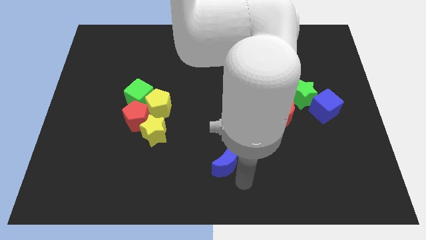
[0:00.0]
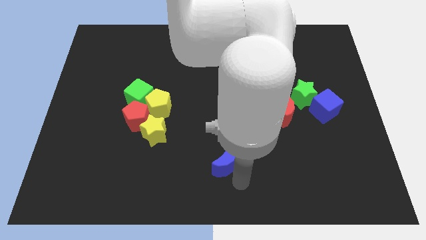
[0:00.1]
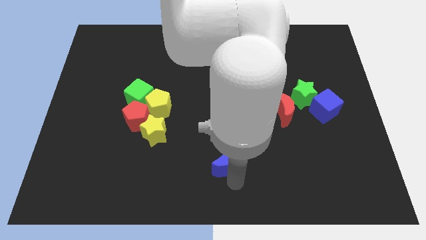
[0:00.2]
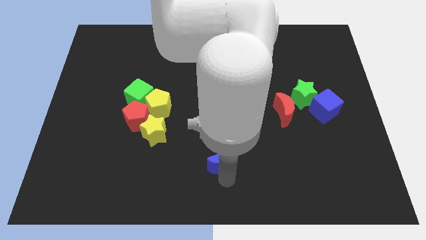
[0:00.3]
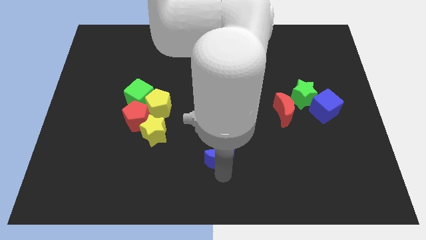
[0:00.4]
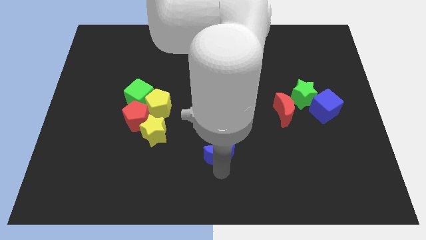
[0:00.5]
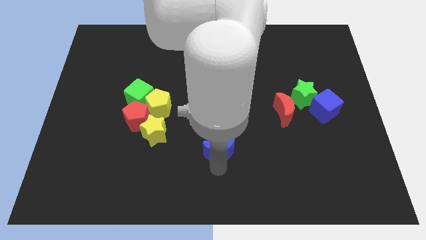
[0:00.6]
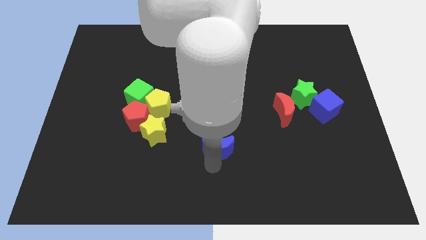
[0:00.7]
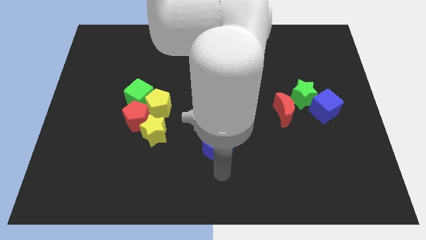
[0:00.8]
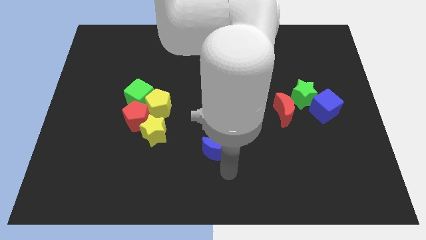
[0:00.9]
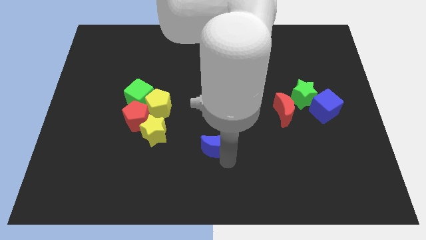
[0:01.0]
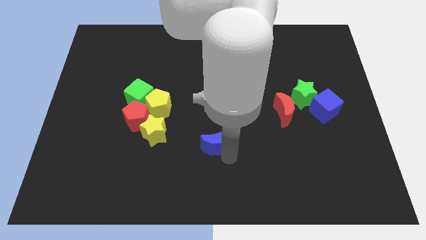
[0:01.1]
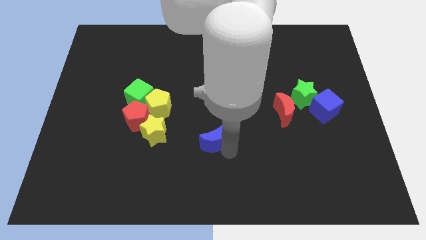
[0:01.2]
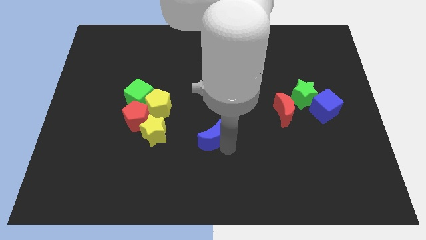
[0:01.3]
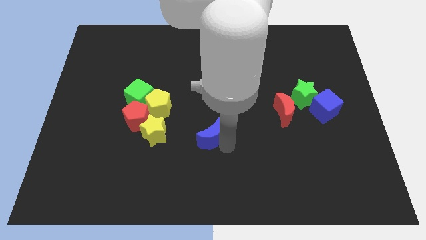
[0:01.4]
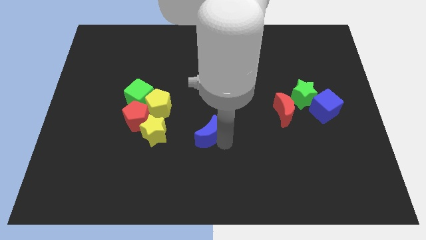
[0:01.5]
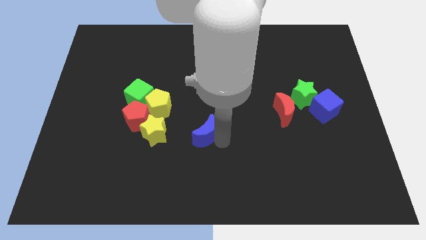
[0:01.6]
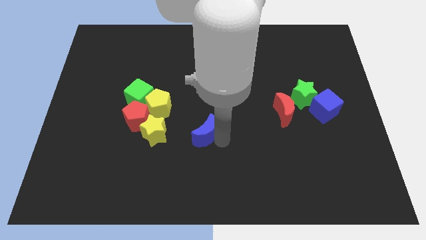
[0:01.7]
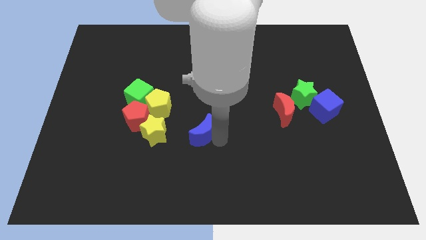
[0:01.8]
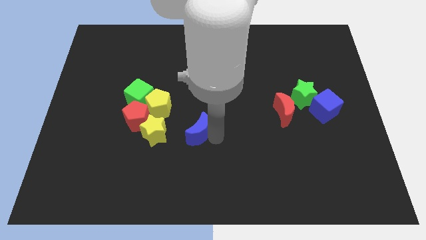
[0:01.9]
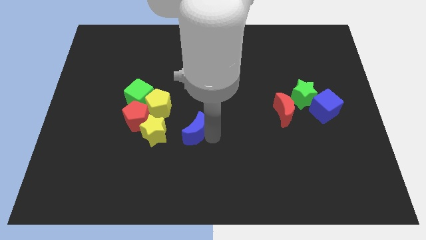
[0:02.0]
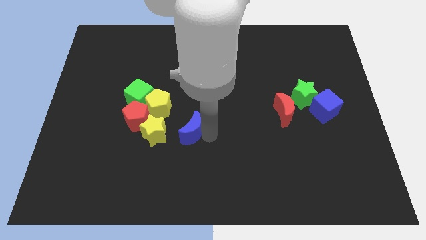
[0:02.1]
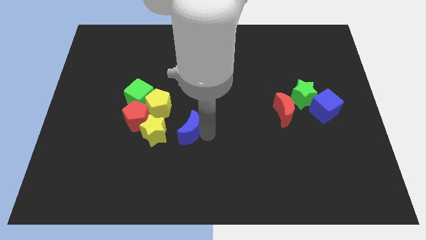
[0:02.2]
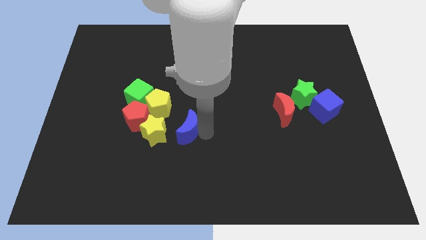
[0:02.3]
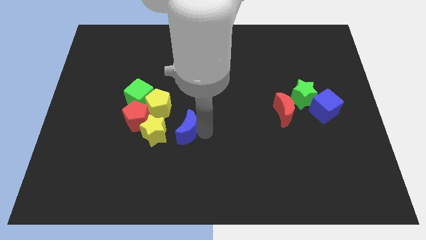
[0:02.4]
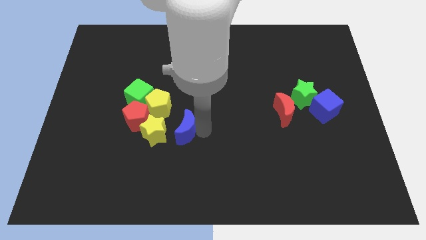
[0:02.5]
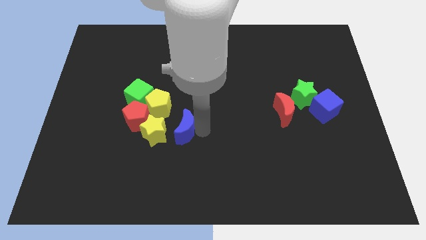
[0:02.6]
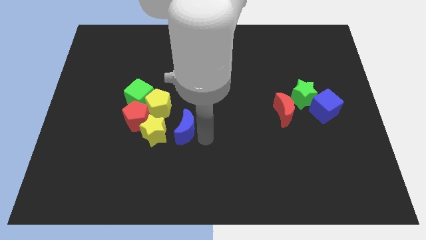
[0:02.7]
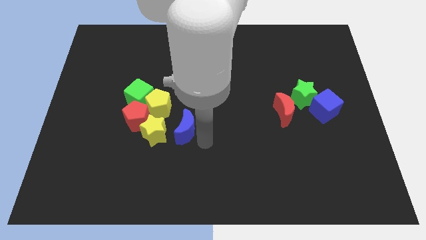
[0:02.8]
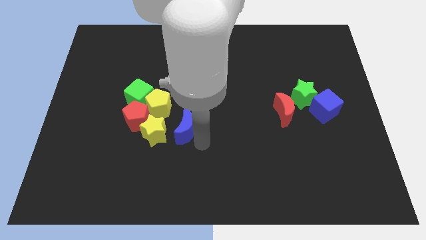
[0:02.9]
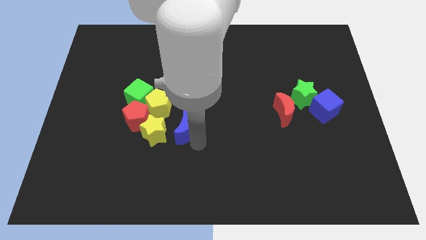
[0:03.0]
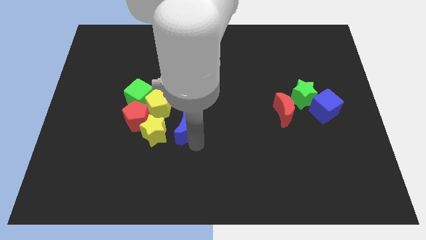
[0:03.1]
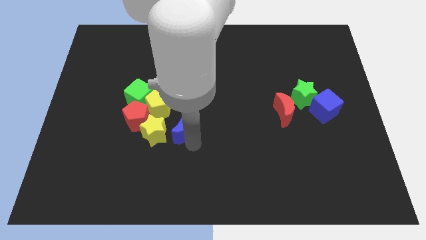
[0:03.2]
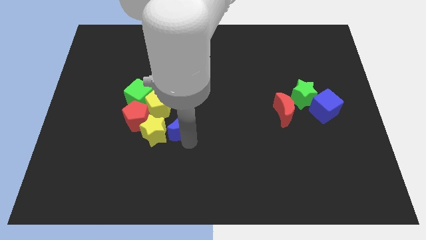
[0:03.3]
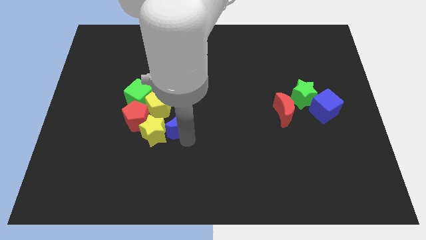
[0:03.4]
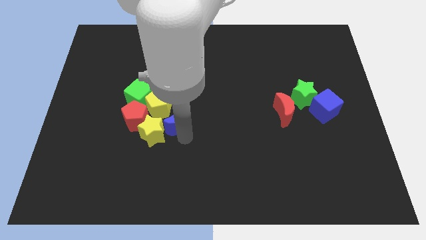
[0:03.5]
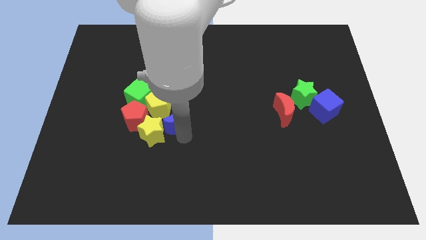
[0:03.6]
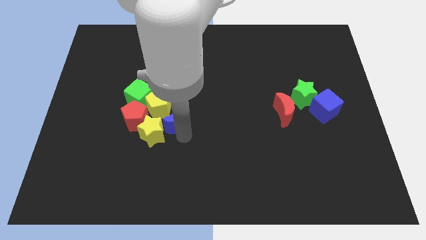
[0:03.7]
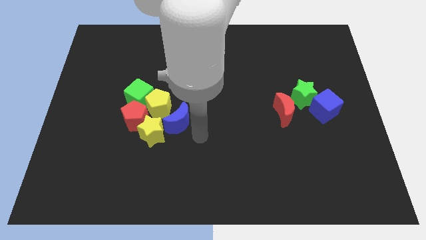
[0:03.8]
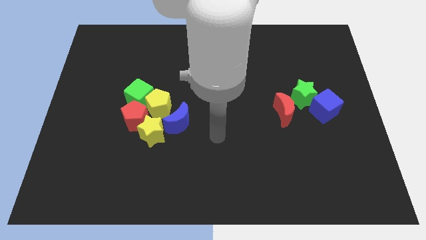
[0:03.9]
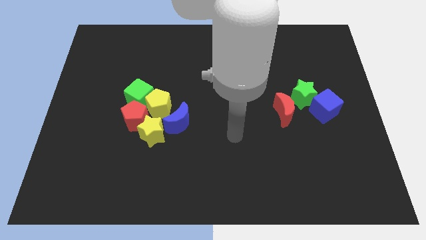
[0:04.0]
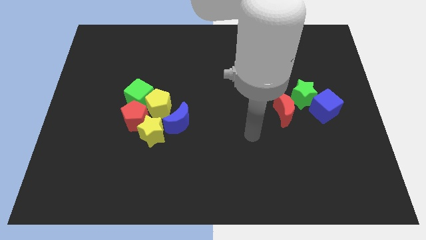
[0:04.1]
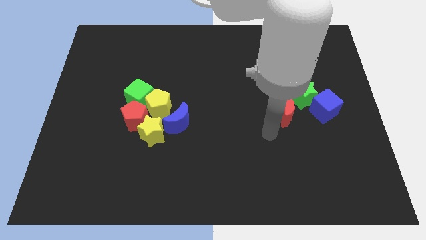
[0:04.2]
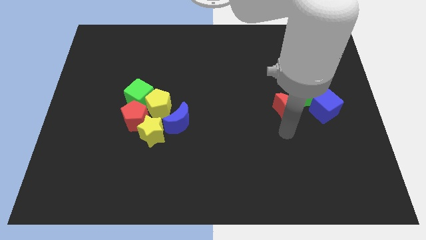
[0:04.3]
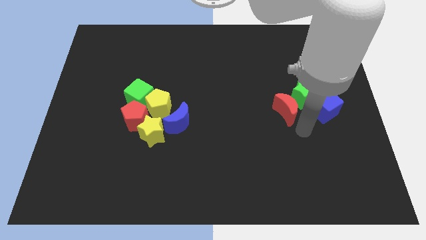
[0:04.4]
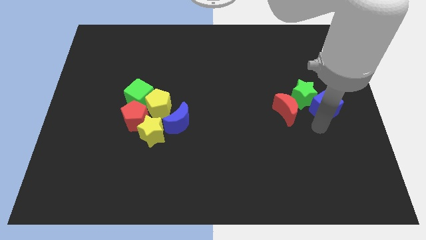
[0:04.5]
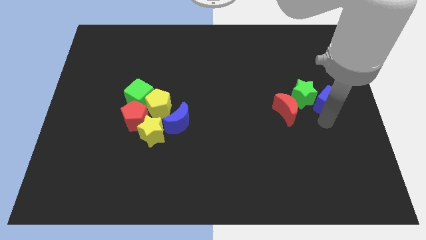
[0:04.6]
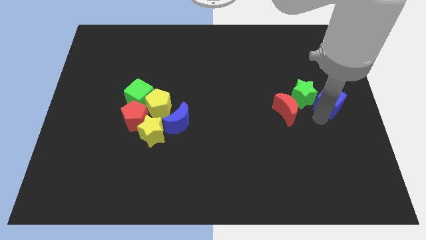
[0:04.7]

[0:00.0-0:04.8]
push the blue crescent into the yellow star

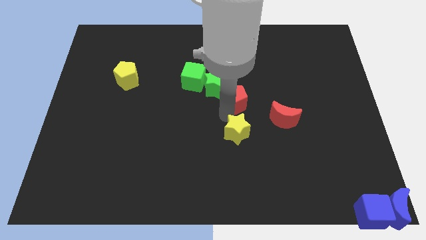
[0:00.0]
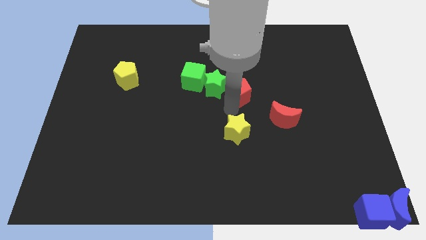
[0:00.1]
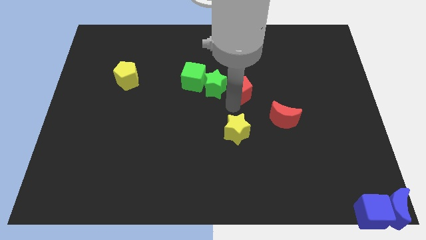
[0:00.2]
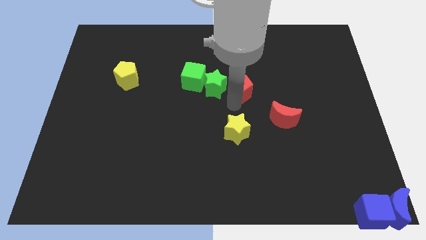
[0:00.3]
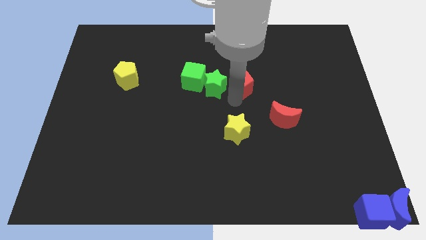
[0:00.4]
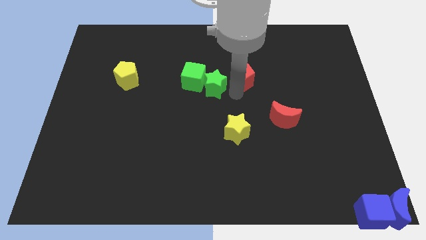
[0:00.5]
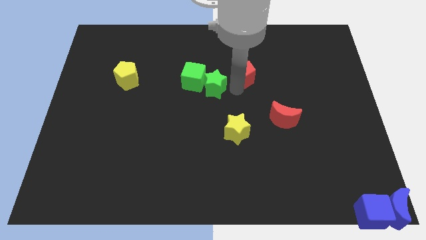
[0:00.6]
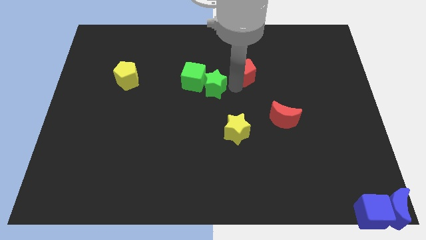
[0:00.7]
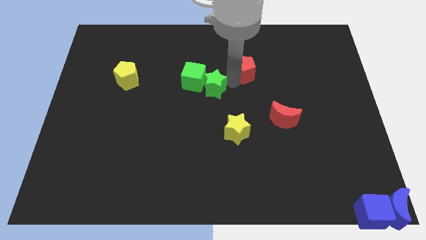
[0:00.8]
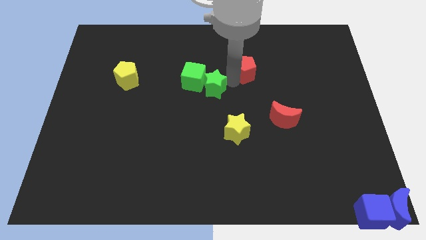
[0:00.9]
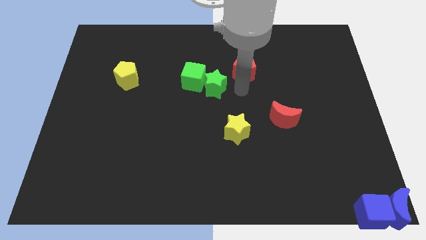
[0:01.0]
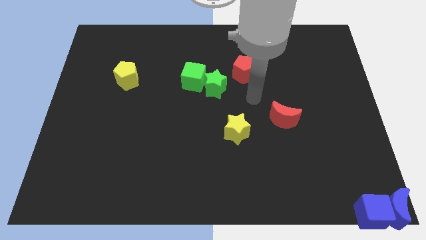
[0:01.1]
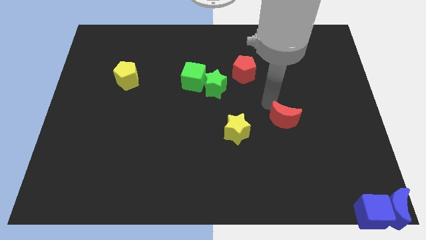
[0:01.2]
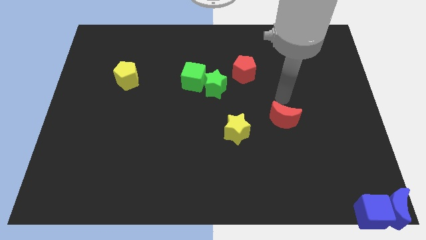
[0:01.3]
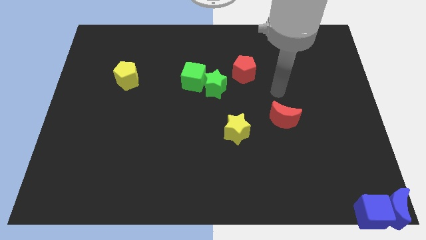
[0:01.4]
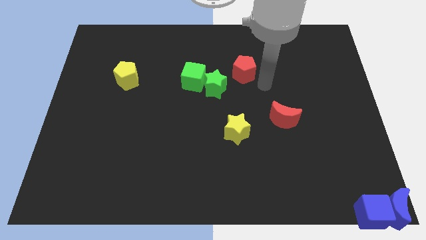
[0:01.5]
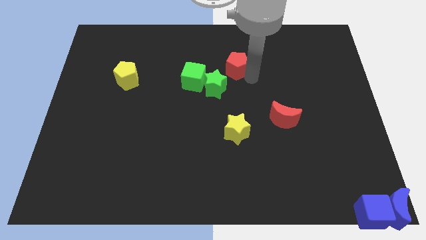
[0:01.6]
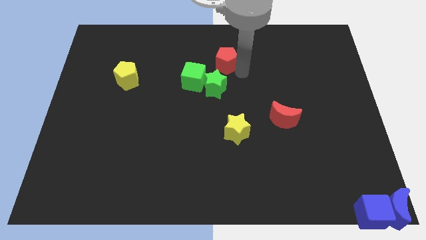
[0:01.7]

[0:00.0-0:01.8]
place the red pentagon above the green star

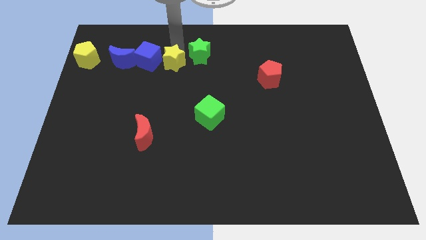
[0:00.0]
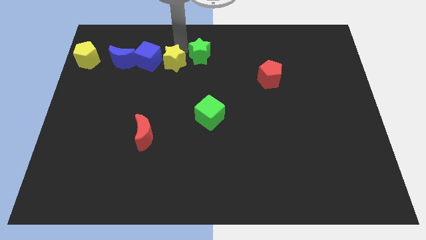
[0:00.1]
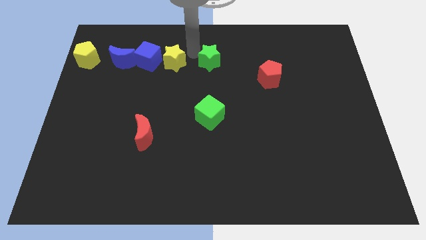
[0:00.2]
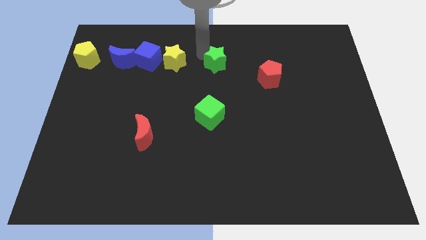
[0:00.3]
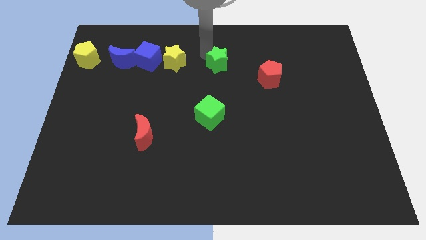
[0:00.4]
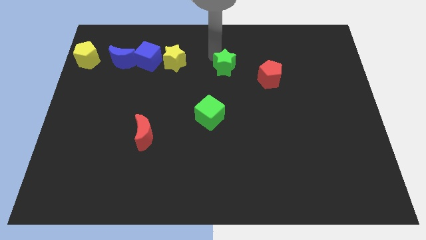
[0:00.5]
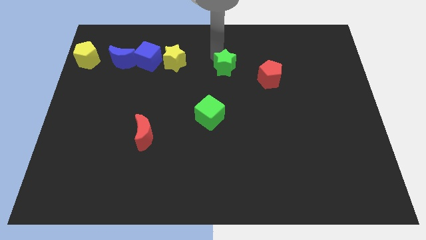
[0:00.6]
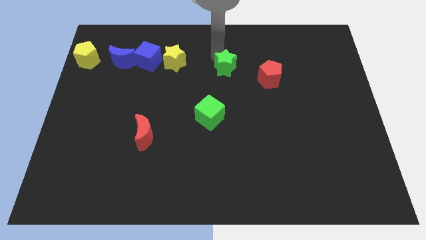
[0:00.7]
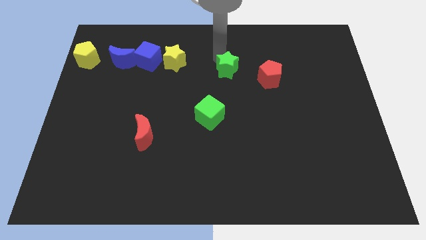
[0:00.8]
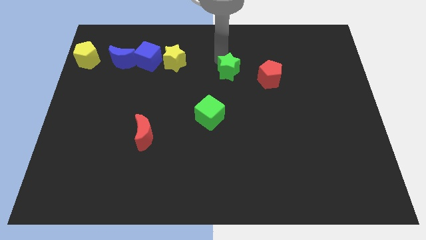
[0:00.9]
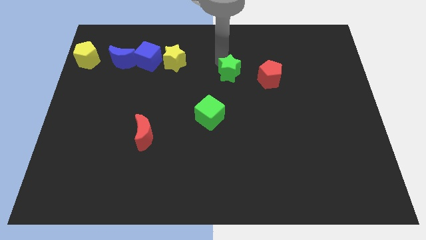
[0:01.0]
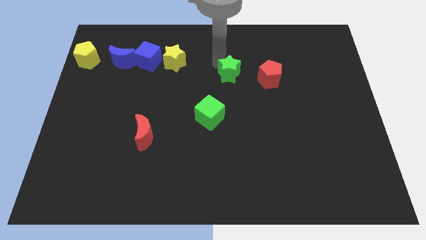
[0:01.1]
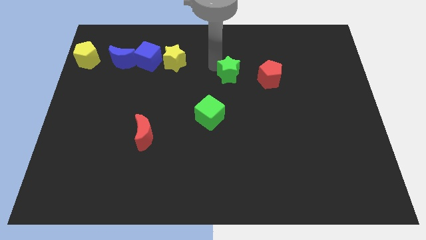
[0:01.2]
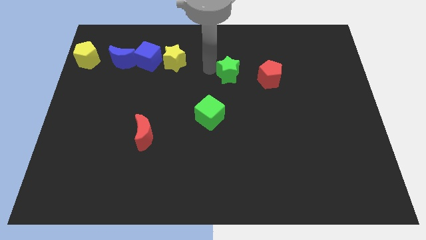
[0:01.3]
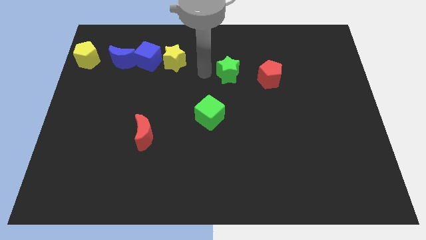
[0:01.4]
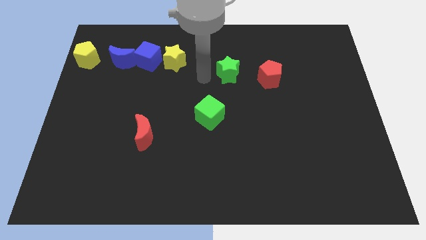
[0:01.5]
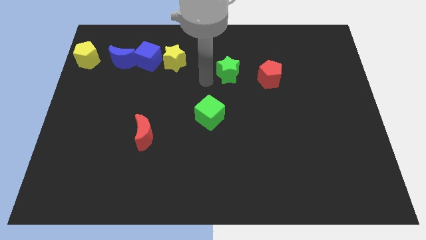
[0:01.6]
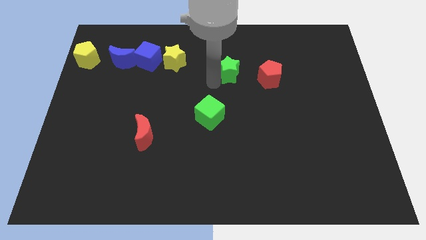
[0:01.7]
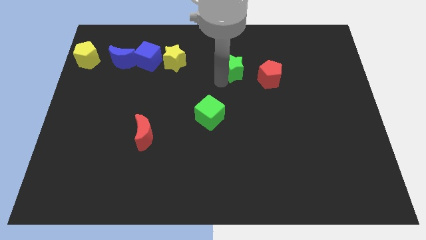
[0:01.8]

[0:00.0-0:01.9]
separate the green star to the left of red pentagon

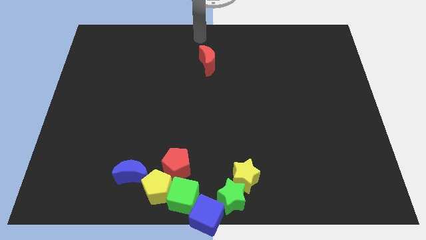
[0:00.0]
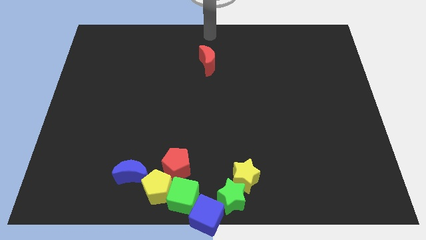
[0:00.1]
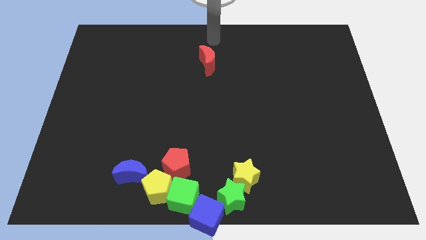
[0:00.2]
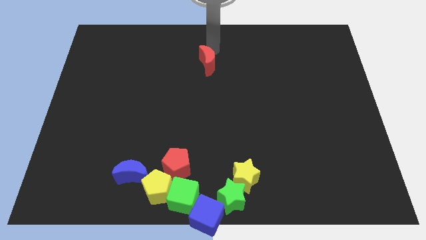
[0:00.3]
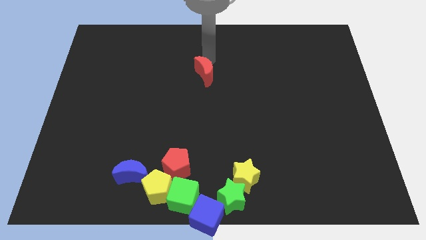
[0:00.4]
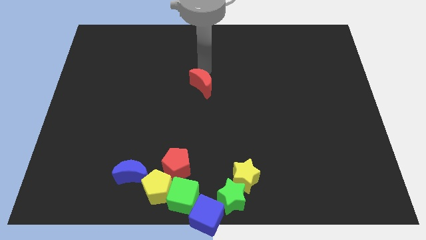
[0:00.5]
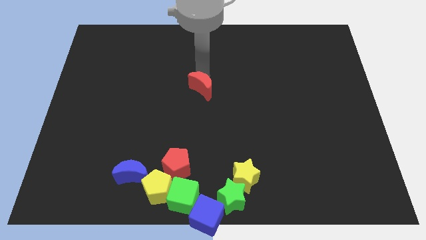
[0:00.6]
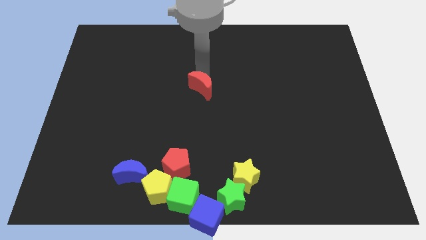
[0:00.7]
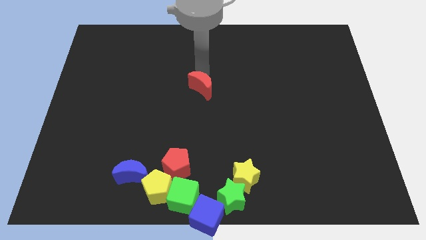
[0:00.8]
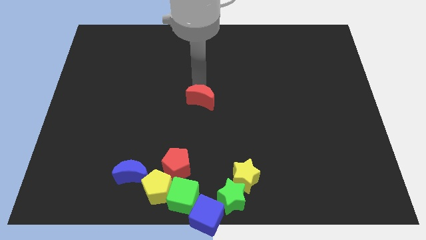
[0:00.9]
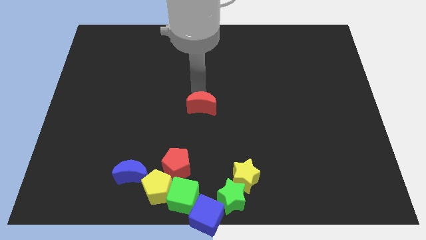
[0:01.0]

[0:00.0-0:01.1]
place the red moon at the center of the board
